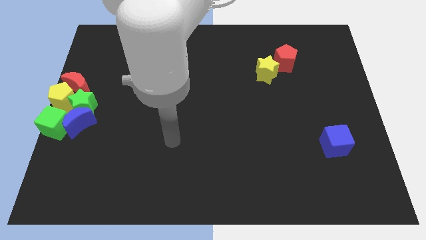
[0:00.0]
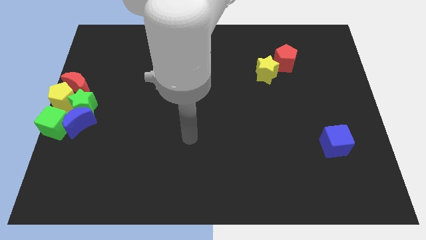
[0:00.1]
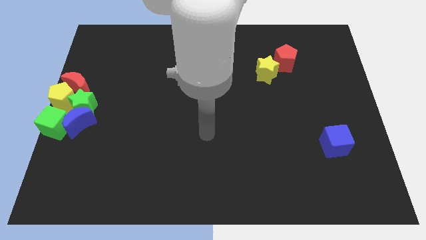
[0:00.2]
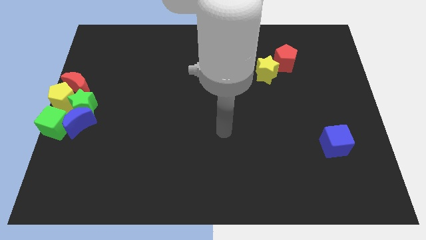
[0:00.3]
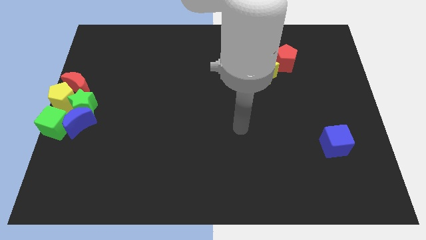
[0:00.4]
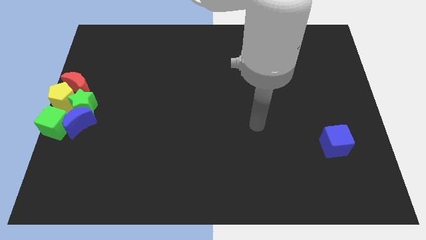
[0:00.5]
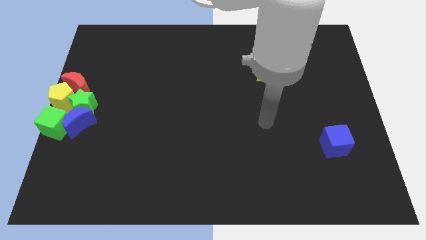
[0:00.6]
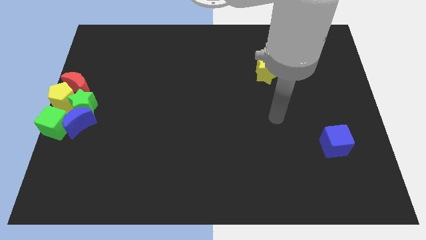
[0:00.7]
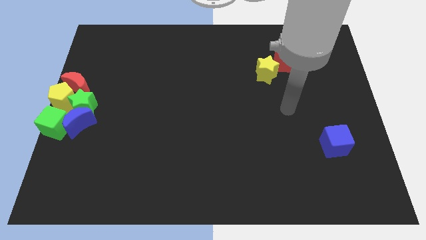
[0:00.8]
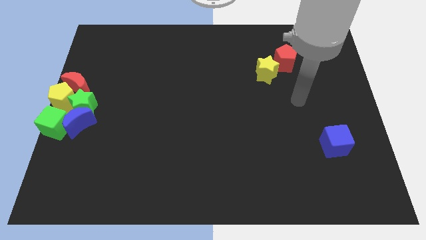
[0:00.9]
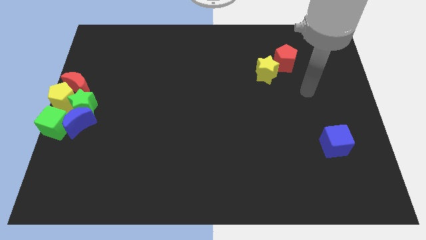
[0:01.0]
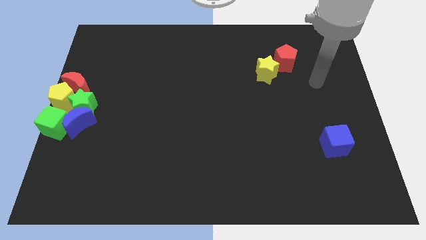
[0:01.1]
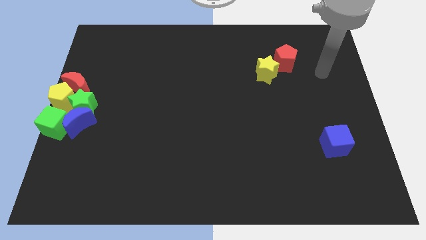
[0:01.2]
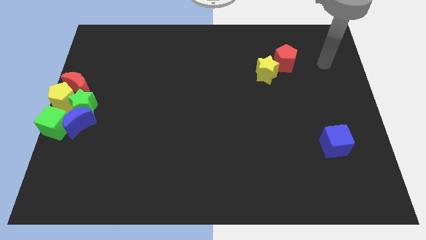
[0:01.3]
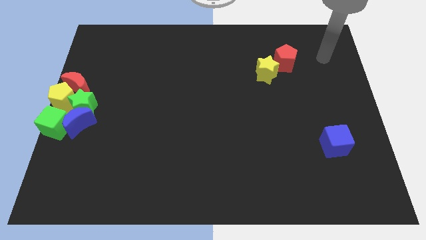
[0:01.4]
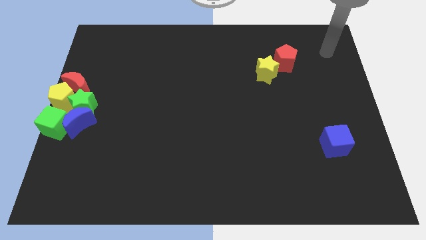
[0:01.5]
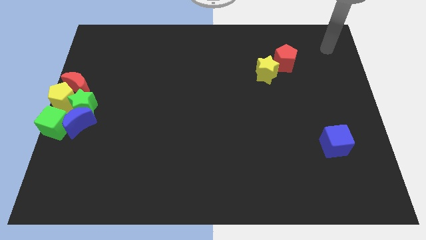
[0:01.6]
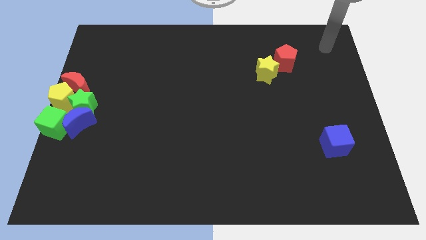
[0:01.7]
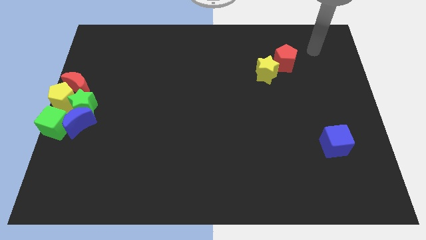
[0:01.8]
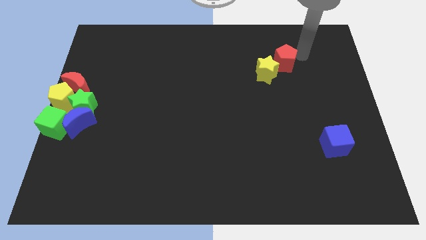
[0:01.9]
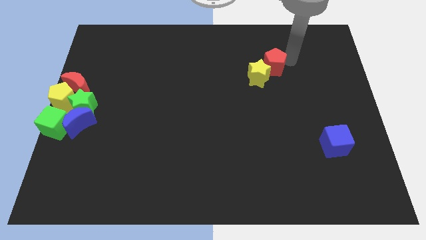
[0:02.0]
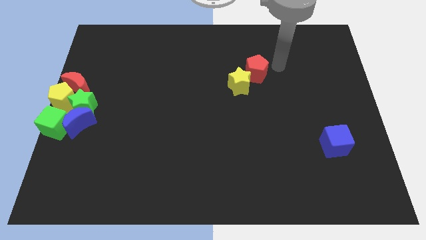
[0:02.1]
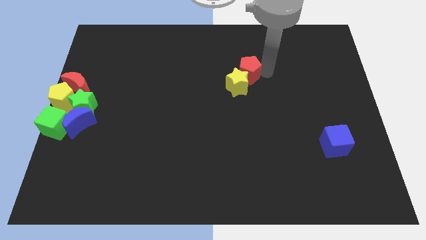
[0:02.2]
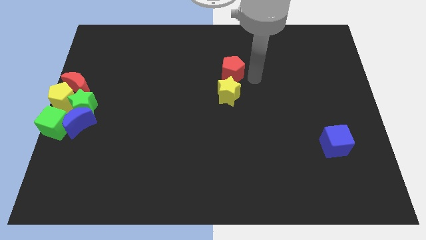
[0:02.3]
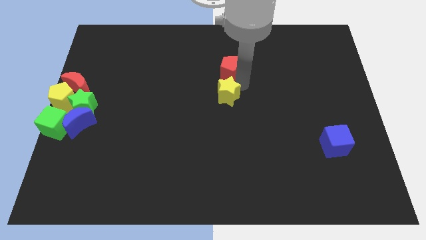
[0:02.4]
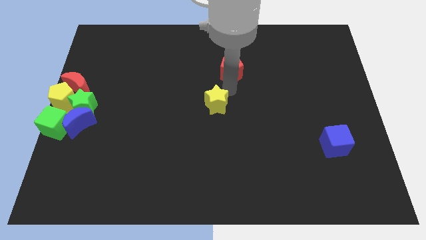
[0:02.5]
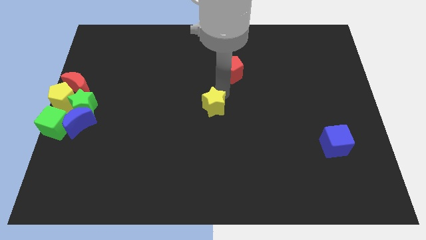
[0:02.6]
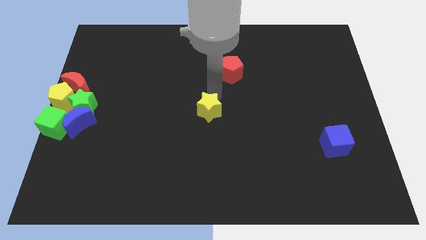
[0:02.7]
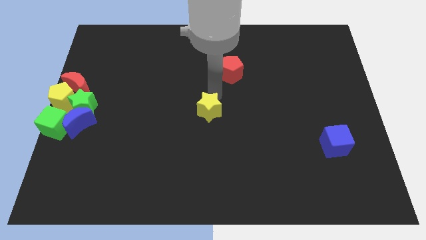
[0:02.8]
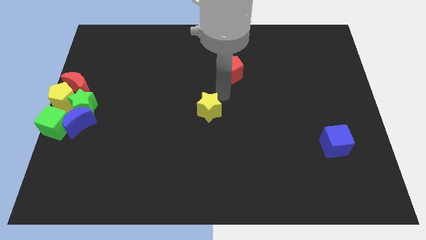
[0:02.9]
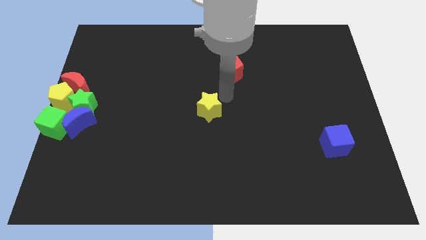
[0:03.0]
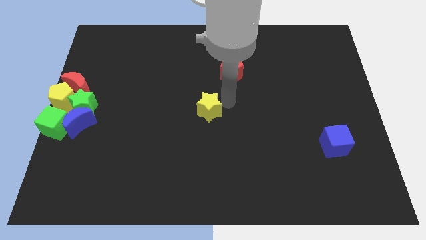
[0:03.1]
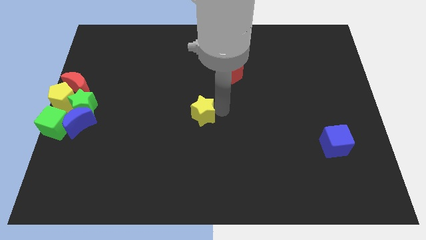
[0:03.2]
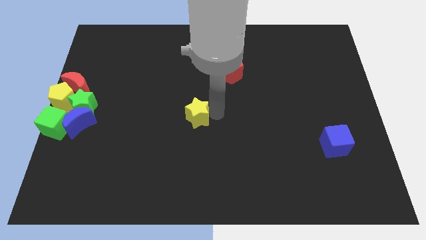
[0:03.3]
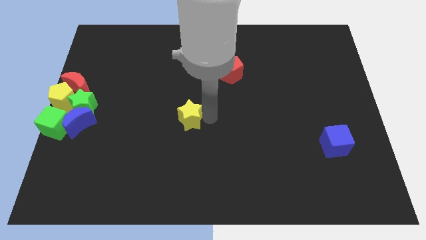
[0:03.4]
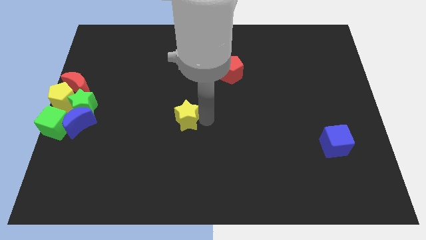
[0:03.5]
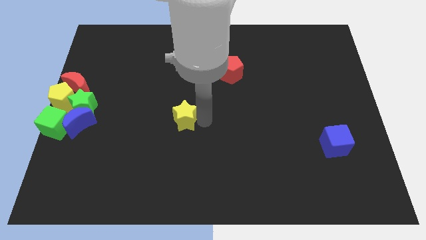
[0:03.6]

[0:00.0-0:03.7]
separate yellow star and the red pentagon

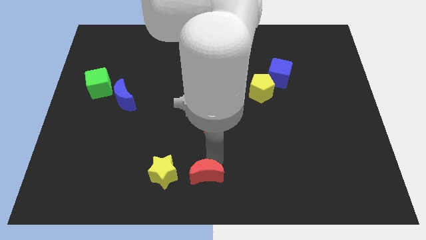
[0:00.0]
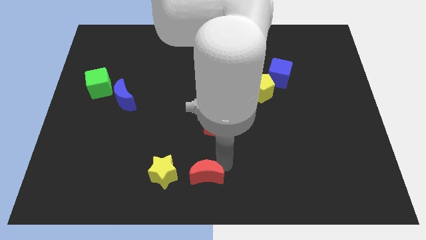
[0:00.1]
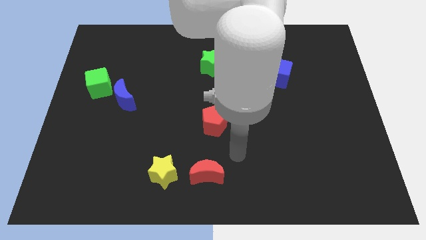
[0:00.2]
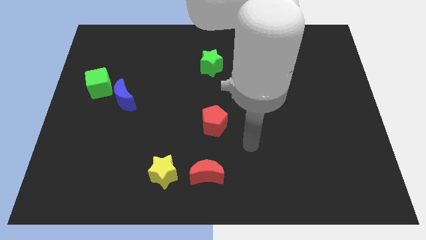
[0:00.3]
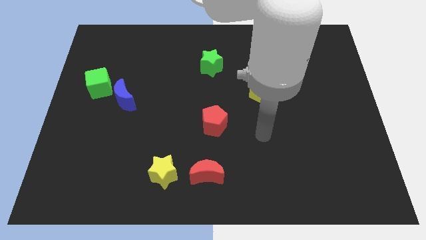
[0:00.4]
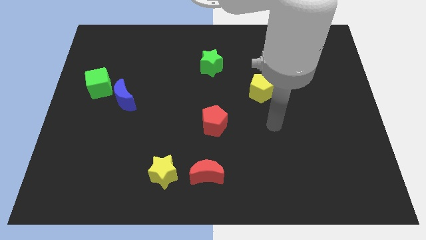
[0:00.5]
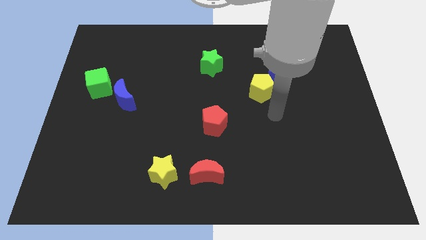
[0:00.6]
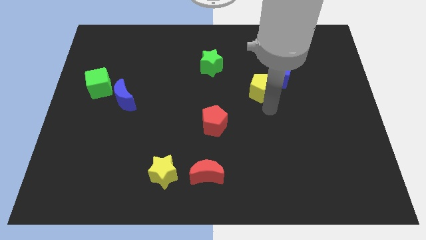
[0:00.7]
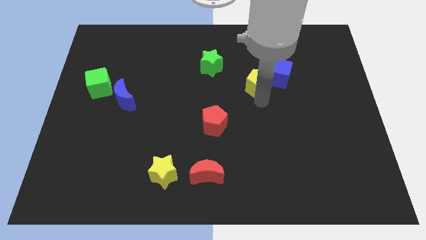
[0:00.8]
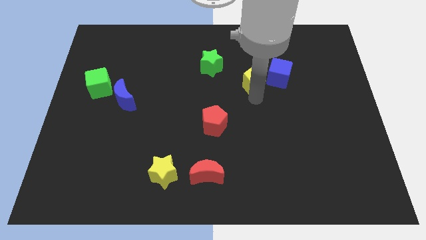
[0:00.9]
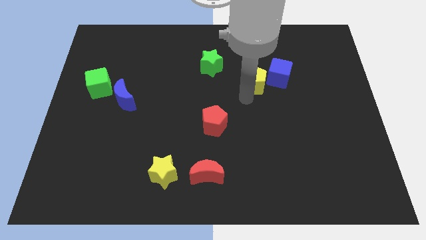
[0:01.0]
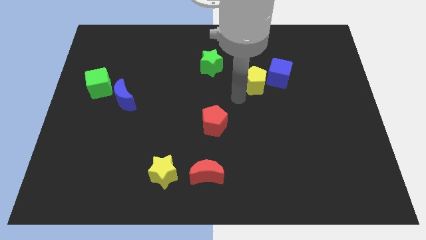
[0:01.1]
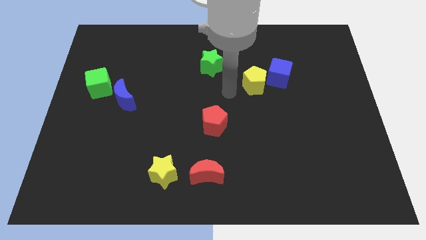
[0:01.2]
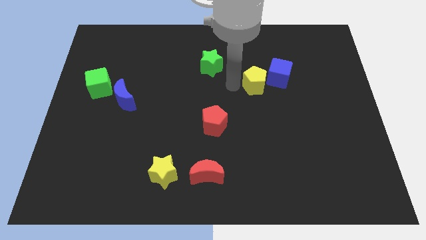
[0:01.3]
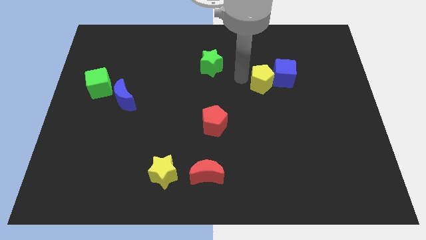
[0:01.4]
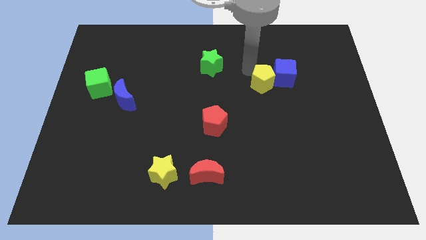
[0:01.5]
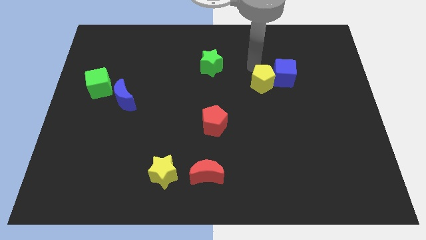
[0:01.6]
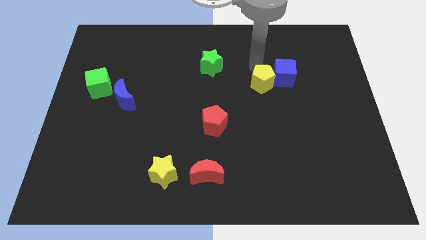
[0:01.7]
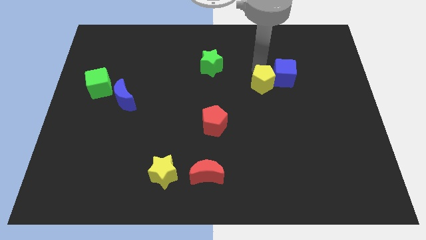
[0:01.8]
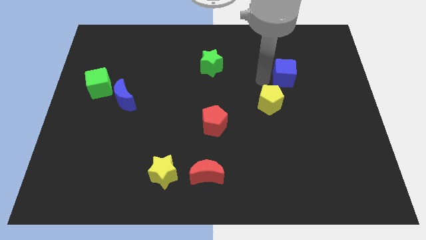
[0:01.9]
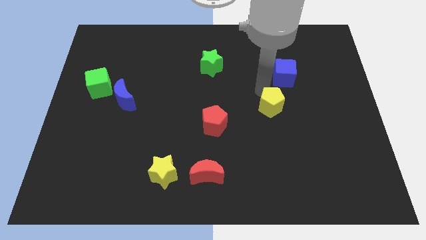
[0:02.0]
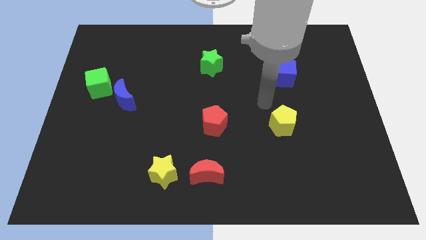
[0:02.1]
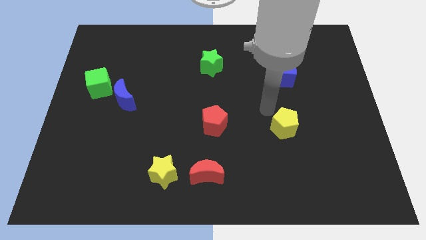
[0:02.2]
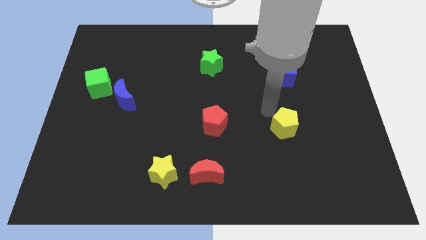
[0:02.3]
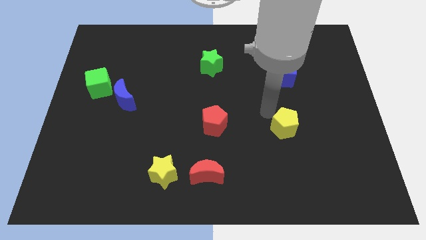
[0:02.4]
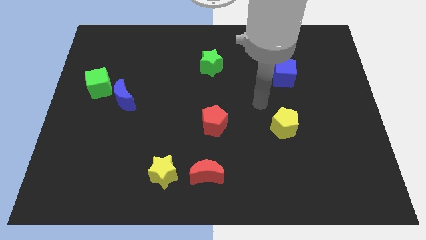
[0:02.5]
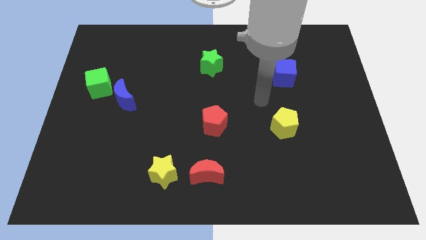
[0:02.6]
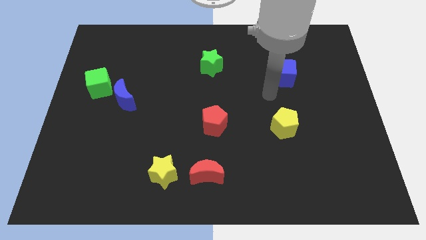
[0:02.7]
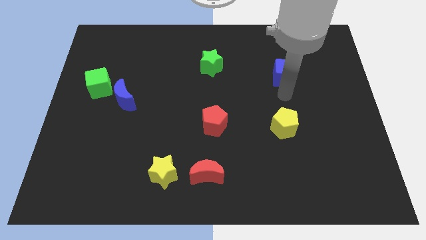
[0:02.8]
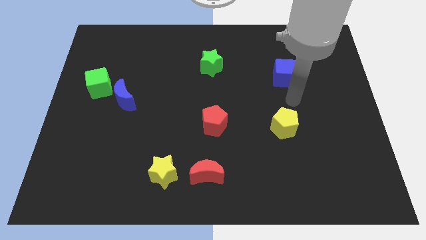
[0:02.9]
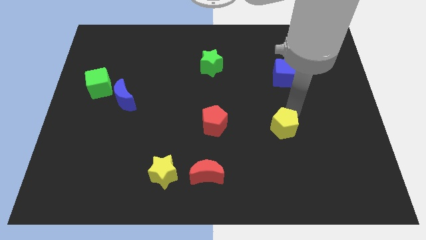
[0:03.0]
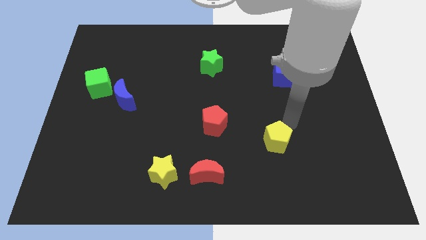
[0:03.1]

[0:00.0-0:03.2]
move the yellow pentagon away from the blue cube

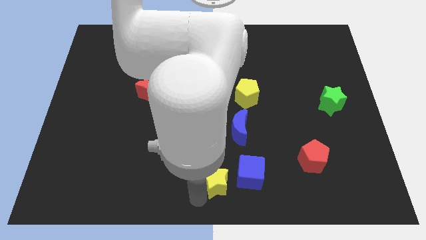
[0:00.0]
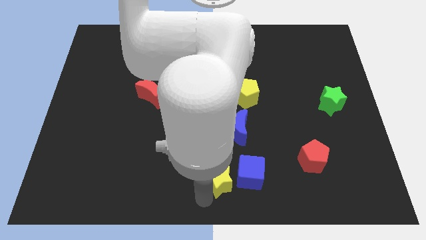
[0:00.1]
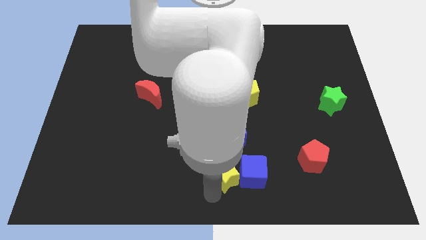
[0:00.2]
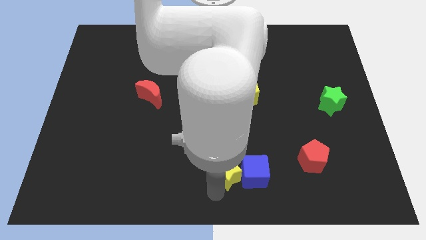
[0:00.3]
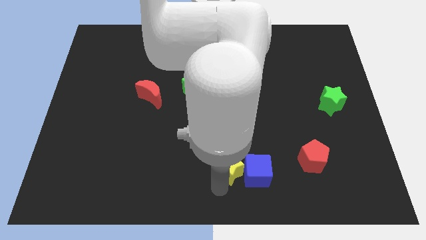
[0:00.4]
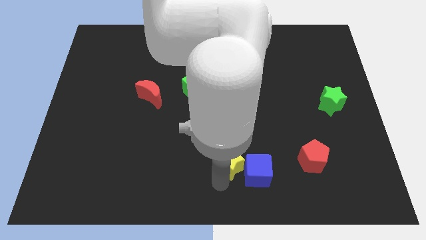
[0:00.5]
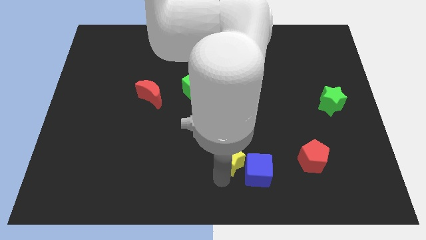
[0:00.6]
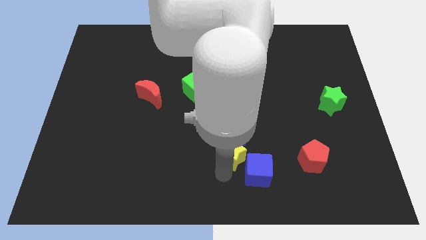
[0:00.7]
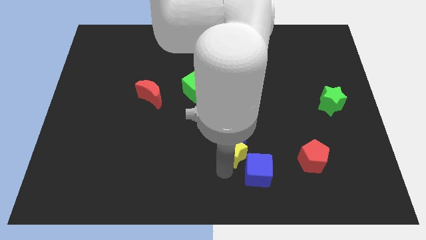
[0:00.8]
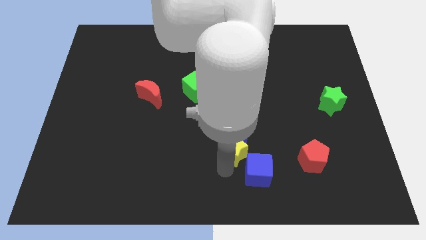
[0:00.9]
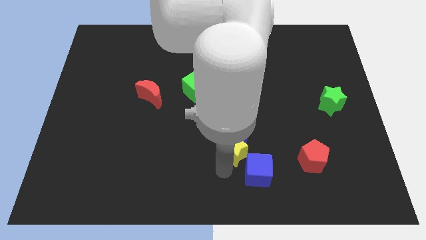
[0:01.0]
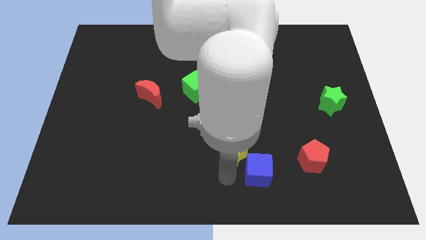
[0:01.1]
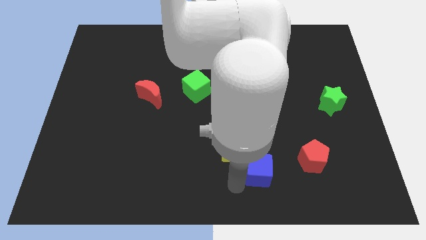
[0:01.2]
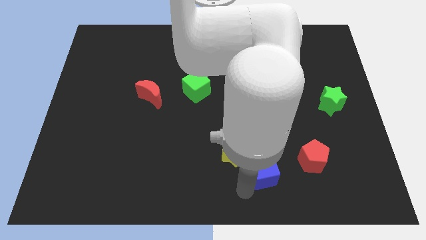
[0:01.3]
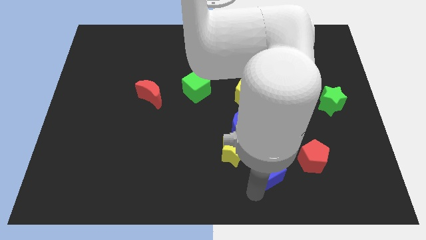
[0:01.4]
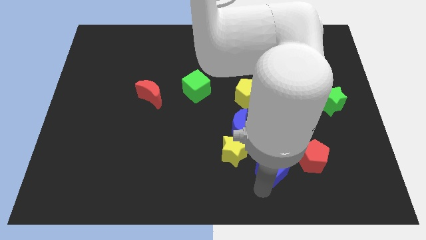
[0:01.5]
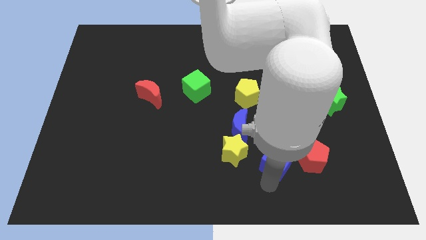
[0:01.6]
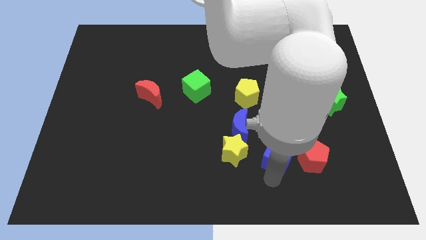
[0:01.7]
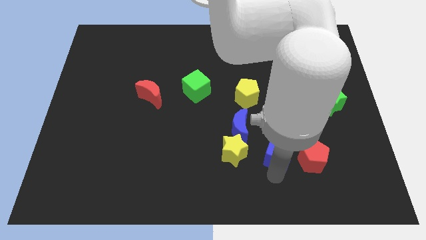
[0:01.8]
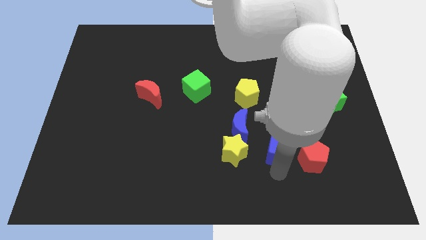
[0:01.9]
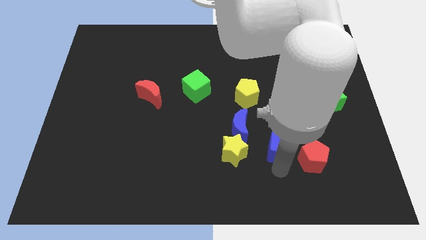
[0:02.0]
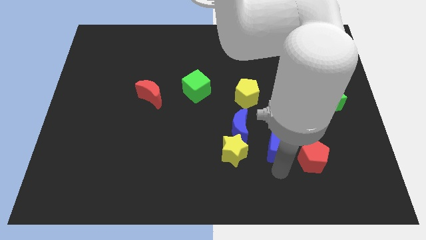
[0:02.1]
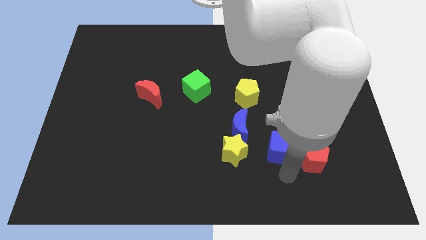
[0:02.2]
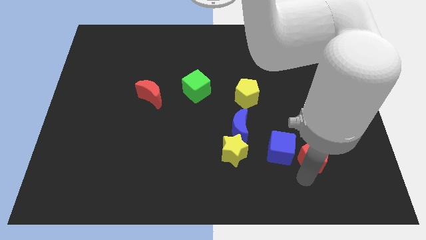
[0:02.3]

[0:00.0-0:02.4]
move blue cube left to red pentagon
